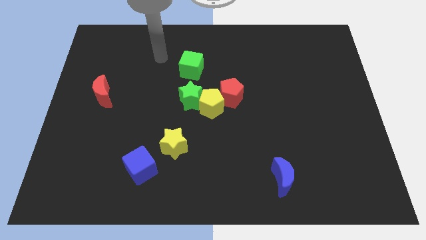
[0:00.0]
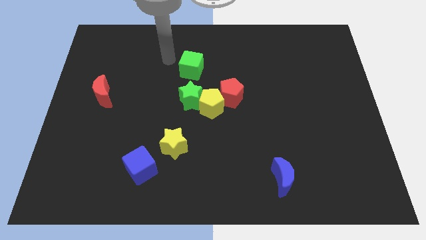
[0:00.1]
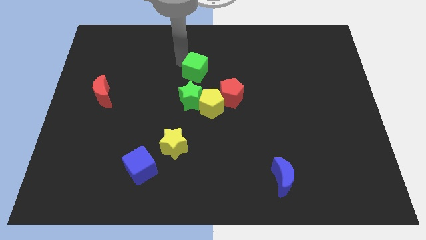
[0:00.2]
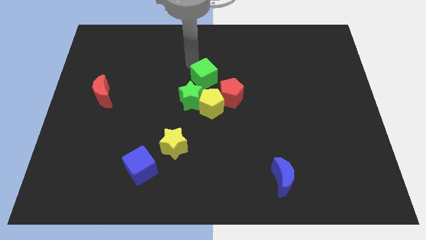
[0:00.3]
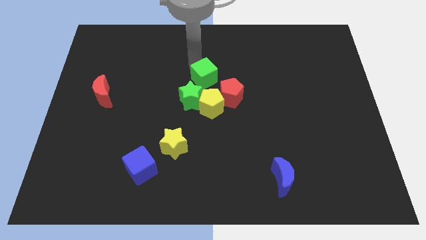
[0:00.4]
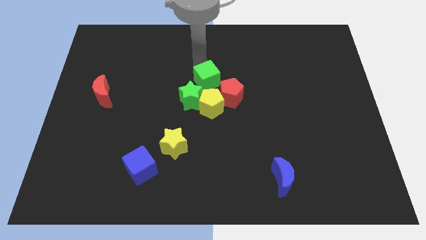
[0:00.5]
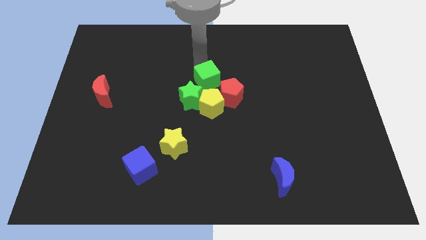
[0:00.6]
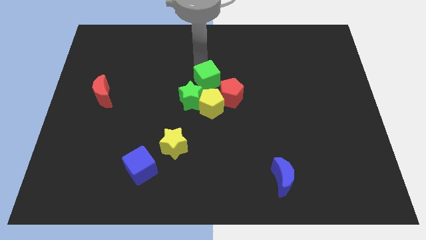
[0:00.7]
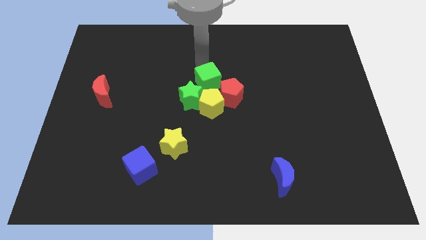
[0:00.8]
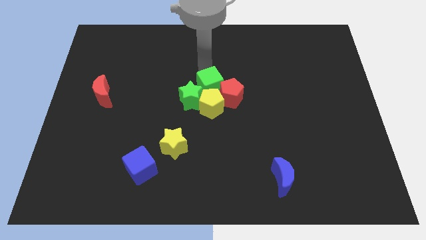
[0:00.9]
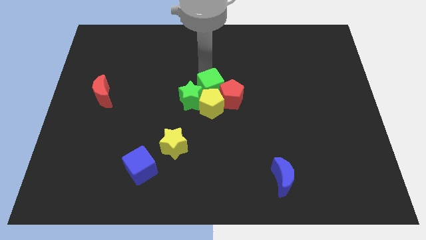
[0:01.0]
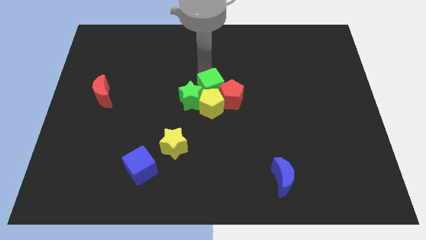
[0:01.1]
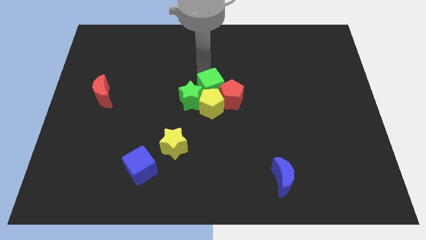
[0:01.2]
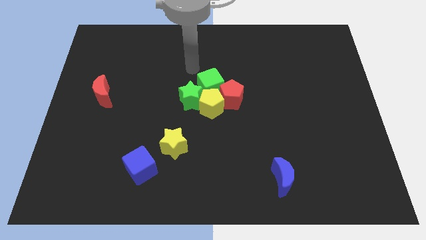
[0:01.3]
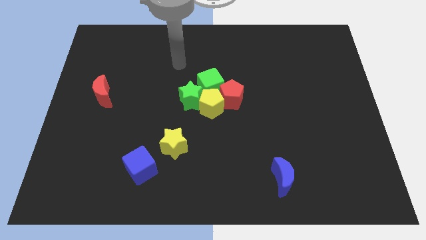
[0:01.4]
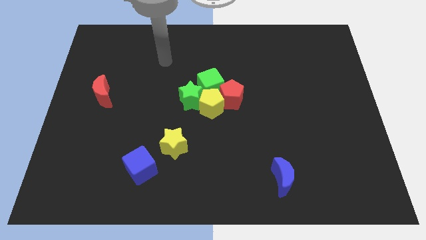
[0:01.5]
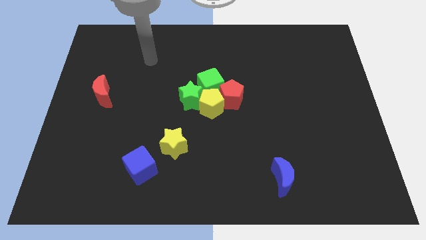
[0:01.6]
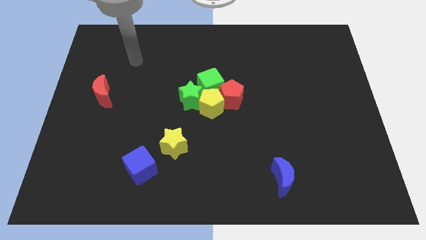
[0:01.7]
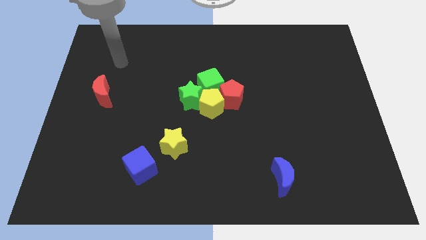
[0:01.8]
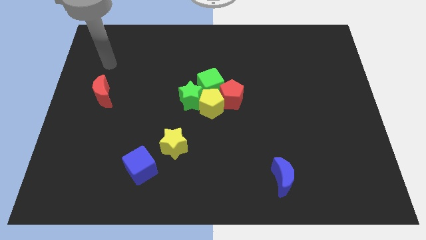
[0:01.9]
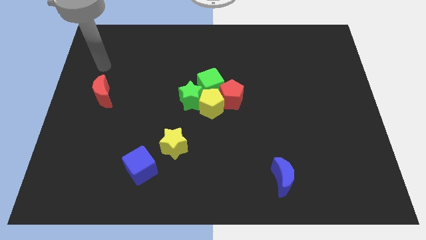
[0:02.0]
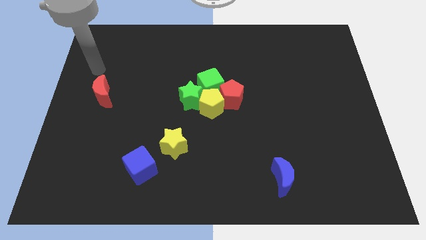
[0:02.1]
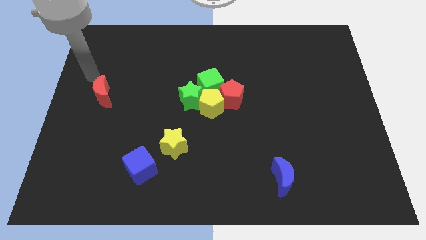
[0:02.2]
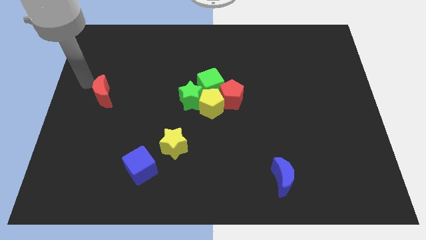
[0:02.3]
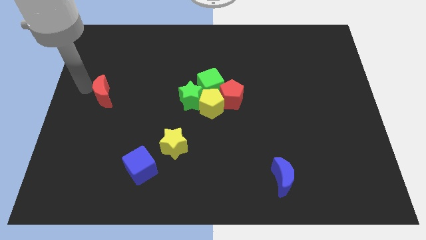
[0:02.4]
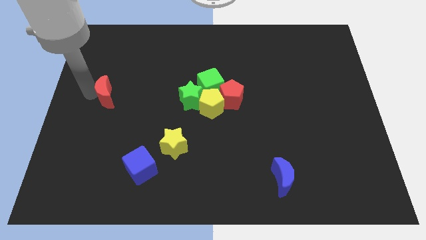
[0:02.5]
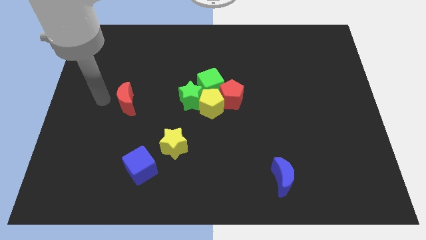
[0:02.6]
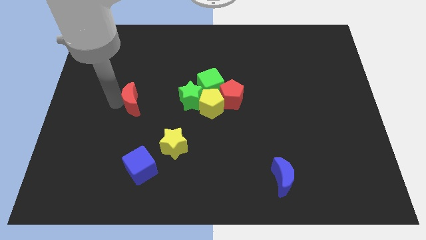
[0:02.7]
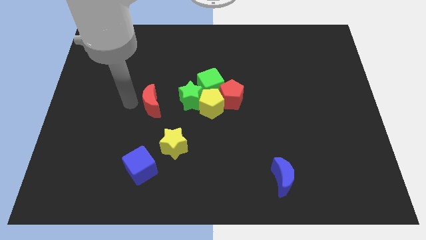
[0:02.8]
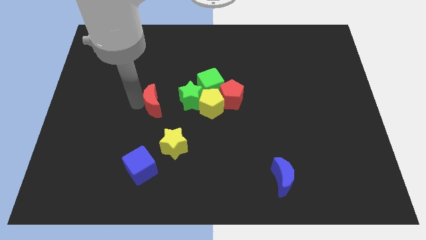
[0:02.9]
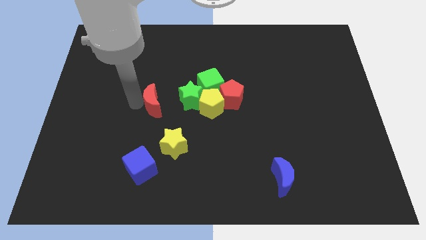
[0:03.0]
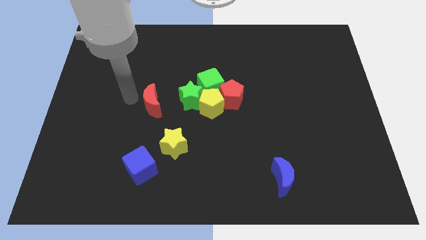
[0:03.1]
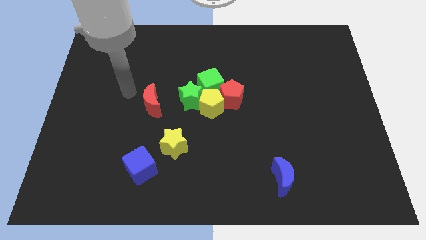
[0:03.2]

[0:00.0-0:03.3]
move the red crescent diagonal to the left of the green star

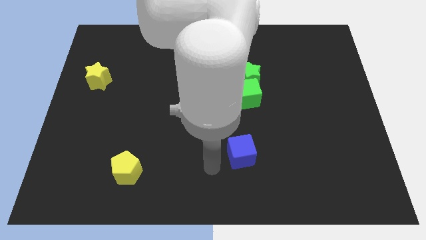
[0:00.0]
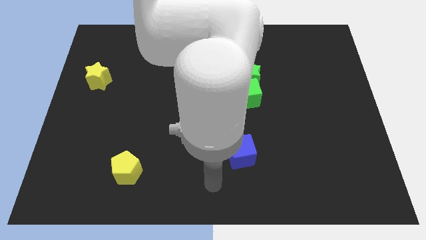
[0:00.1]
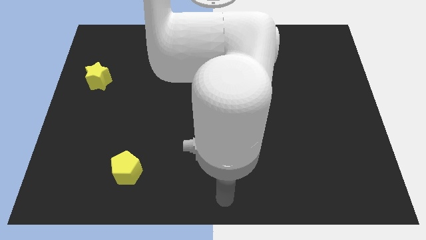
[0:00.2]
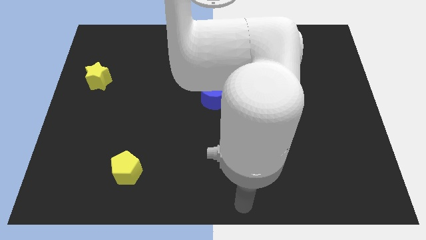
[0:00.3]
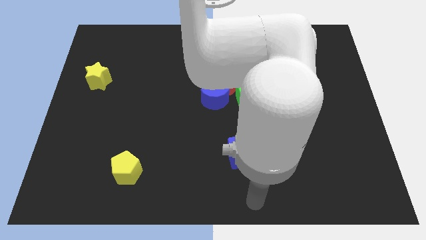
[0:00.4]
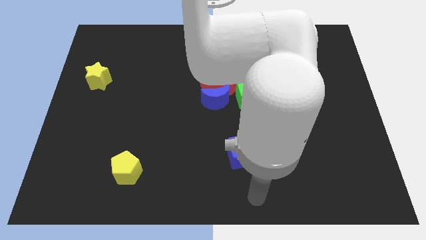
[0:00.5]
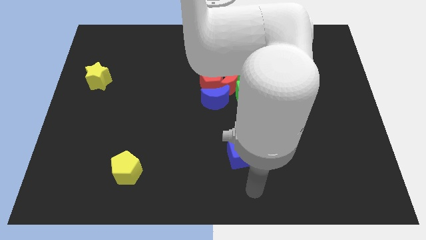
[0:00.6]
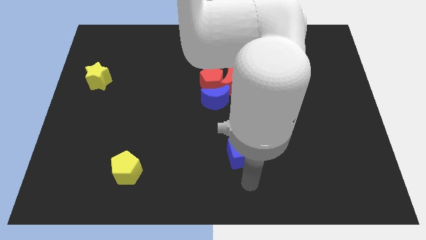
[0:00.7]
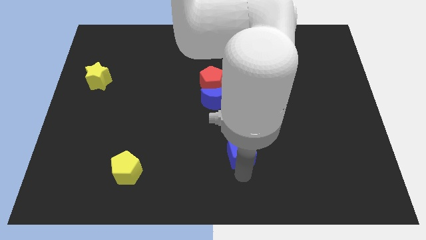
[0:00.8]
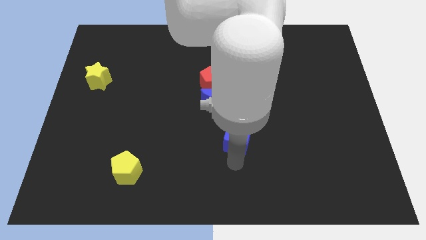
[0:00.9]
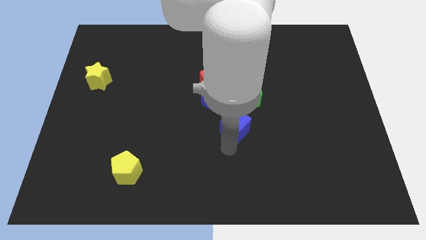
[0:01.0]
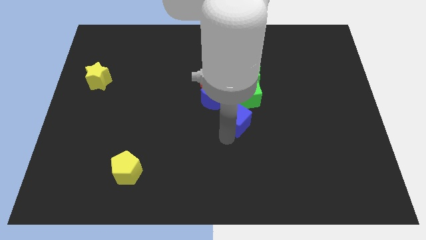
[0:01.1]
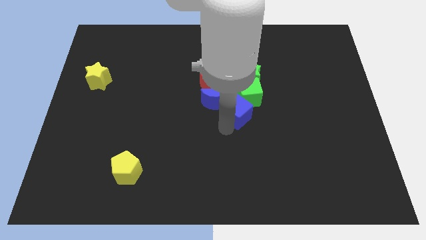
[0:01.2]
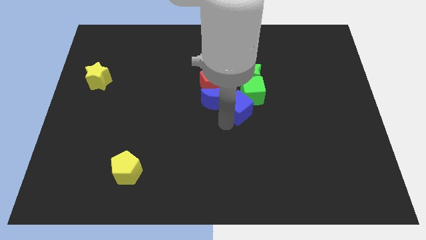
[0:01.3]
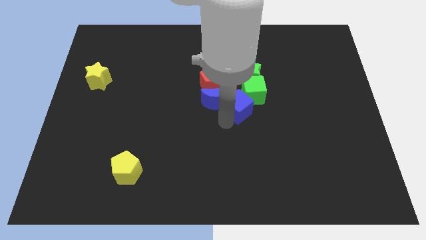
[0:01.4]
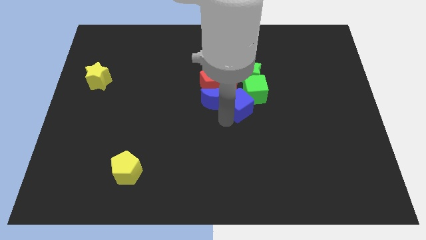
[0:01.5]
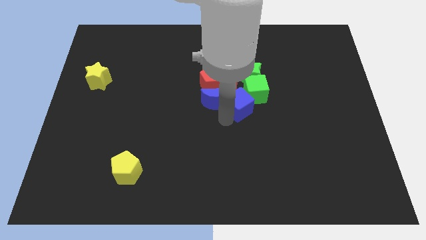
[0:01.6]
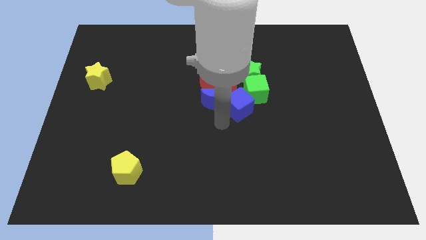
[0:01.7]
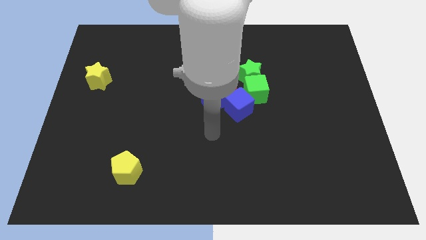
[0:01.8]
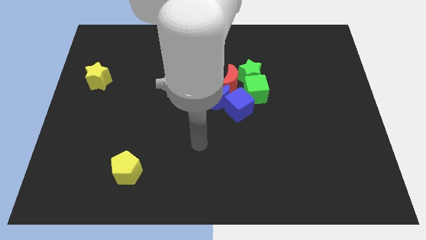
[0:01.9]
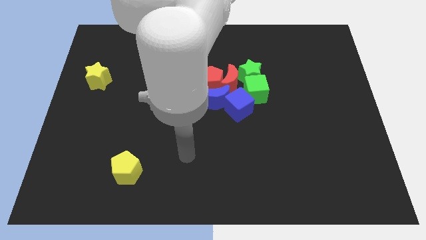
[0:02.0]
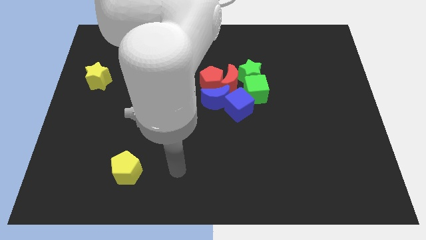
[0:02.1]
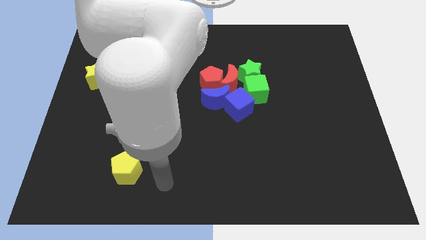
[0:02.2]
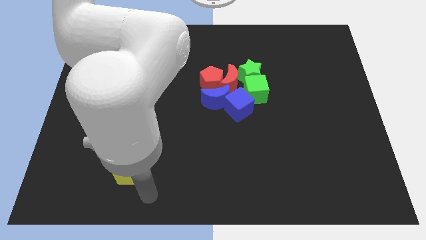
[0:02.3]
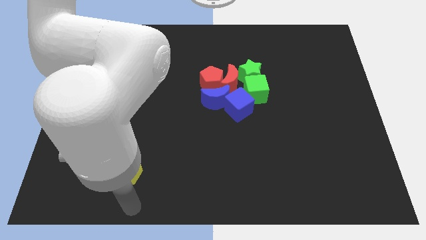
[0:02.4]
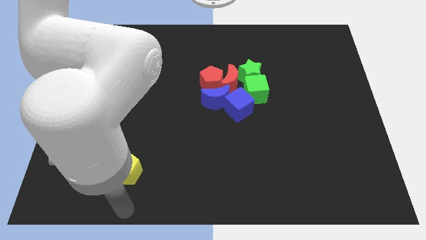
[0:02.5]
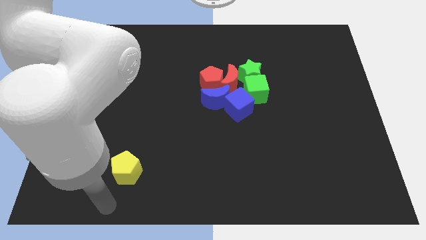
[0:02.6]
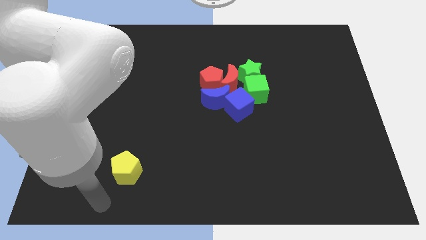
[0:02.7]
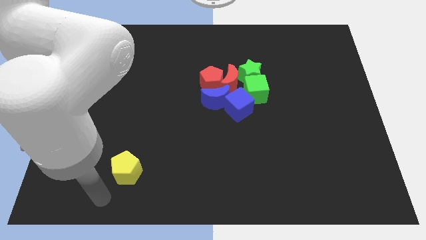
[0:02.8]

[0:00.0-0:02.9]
push blue cube in to group of block

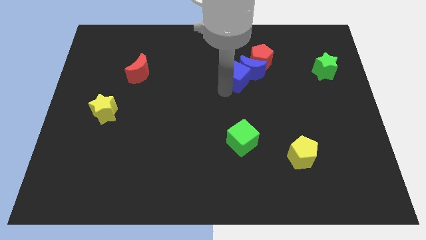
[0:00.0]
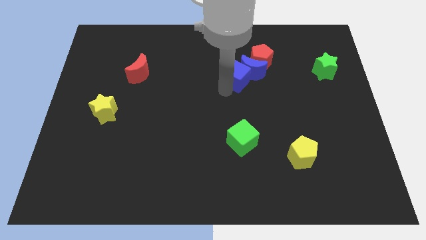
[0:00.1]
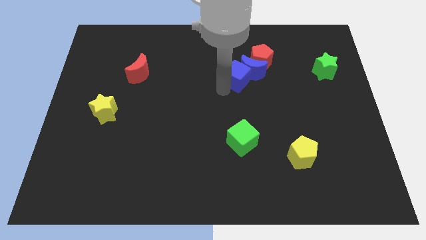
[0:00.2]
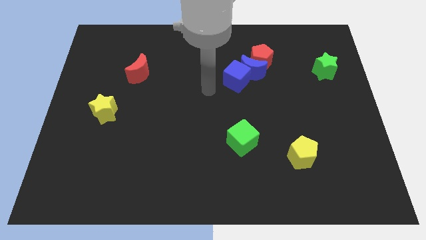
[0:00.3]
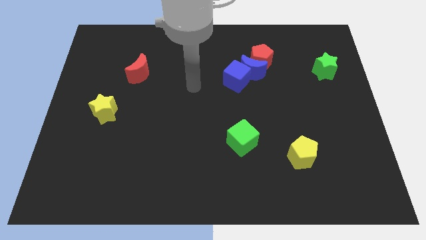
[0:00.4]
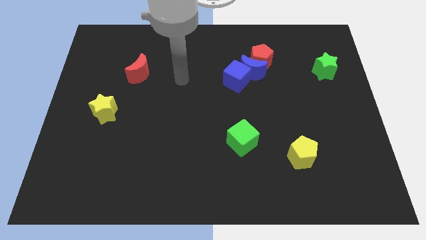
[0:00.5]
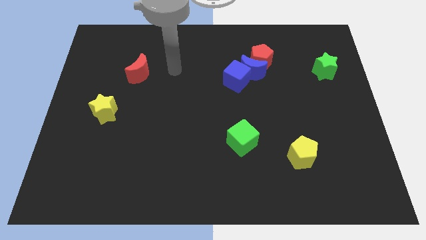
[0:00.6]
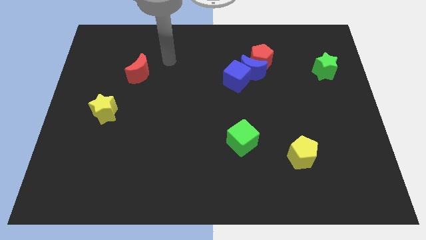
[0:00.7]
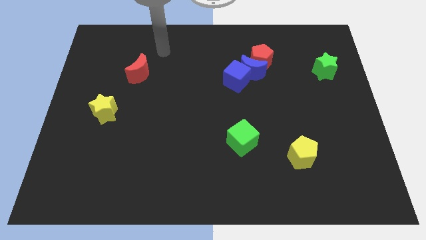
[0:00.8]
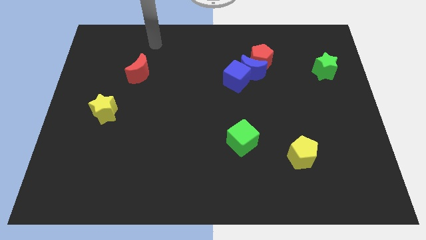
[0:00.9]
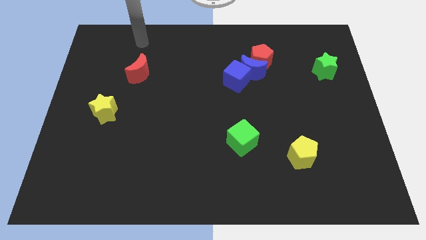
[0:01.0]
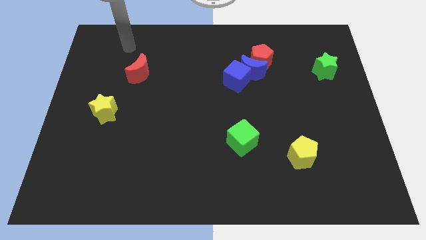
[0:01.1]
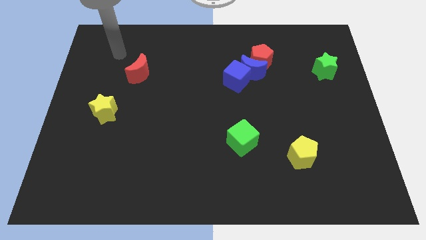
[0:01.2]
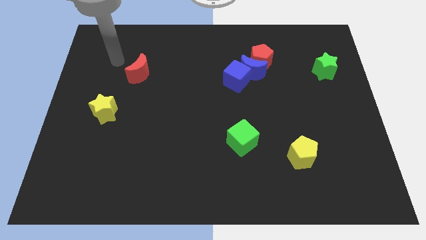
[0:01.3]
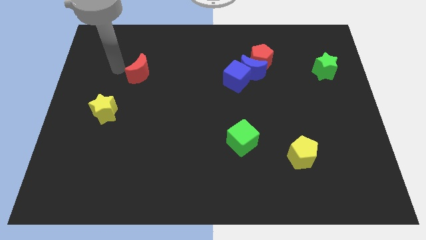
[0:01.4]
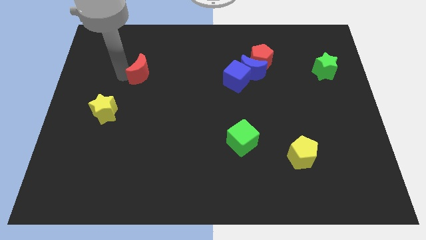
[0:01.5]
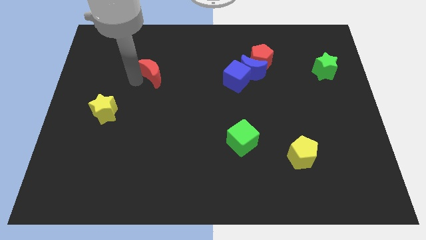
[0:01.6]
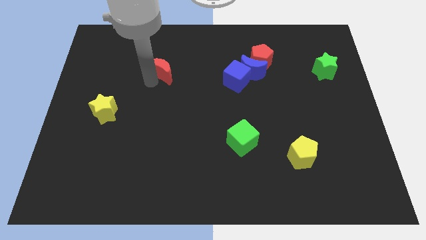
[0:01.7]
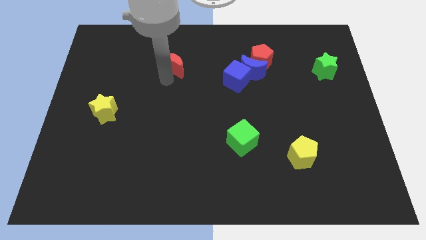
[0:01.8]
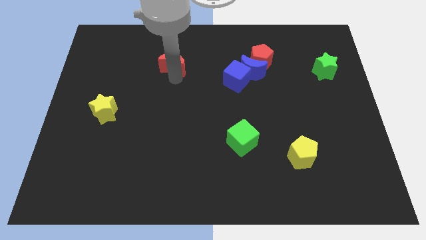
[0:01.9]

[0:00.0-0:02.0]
push the red crescent towards right

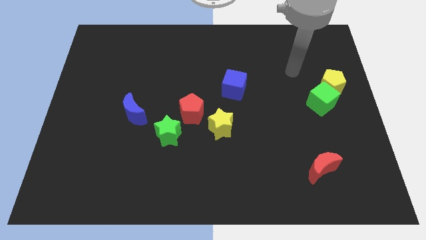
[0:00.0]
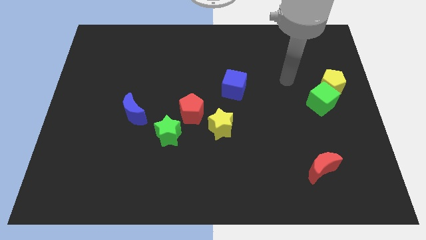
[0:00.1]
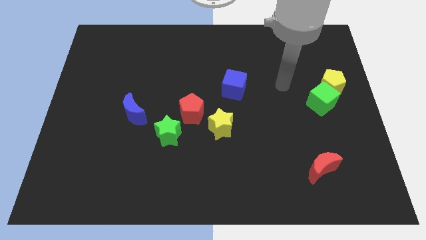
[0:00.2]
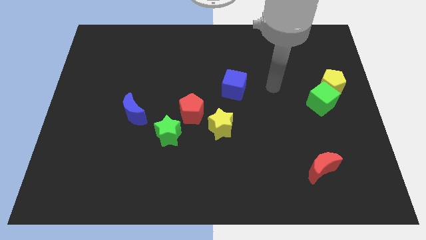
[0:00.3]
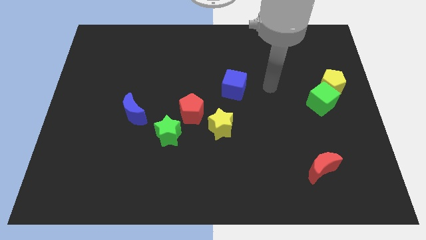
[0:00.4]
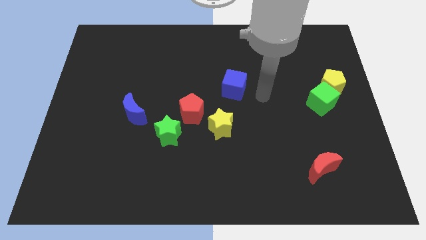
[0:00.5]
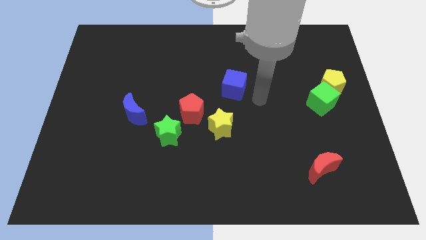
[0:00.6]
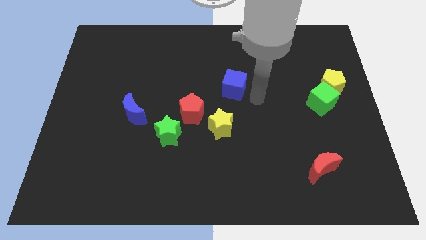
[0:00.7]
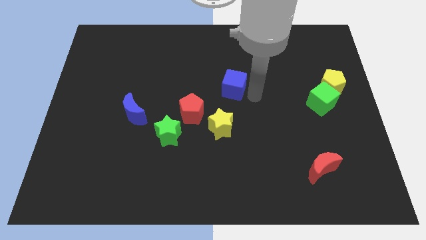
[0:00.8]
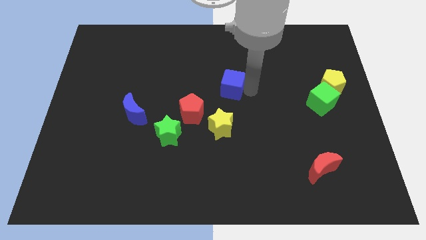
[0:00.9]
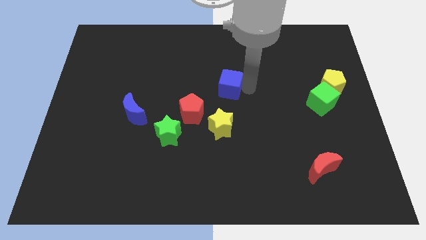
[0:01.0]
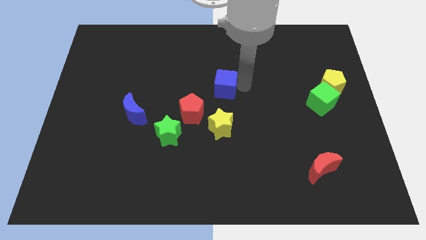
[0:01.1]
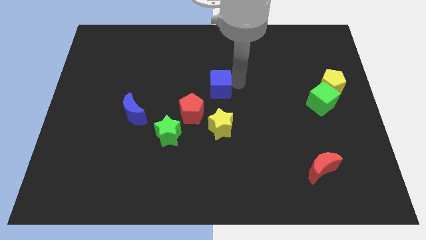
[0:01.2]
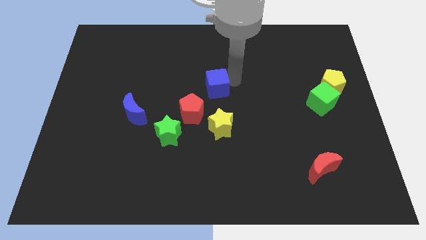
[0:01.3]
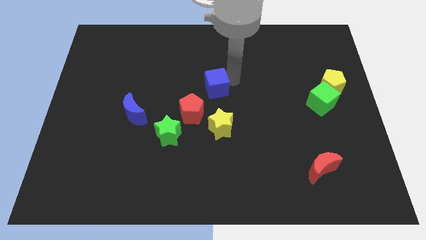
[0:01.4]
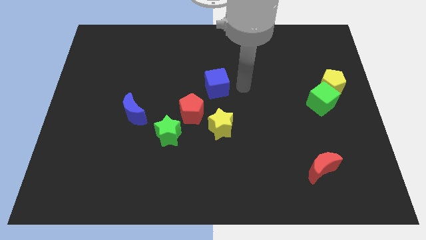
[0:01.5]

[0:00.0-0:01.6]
move the blue cube to the top of the yellow star
